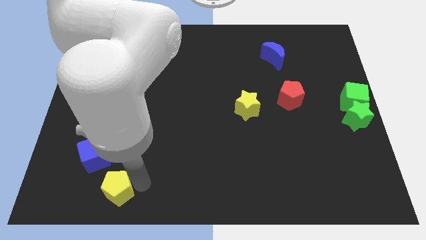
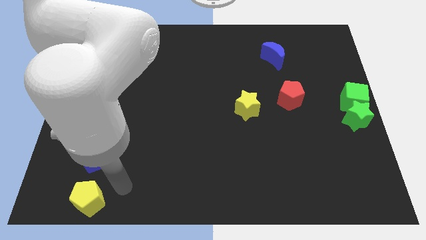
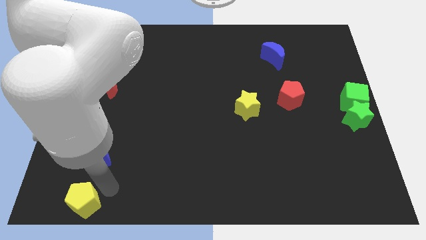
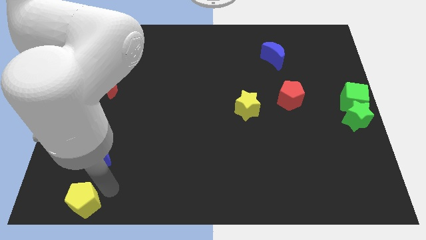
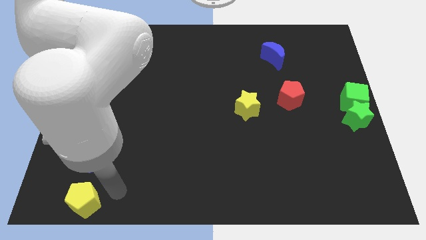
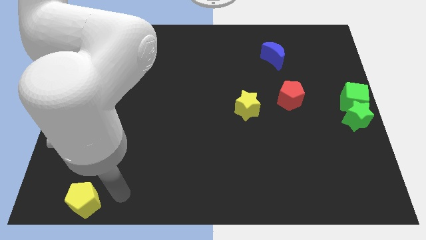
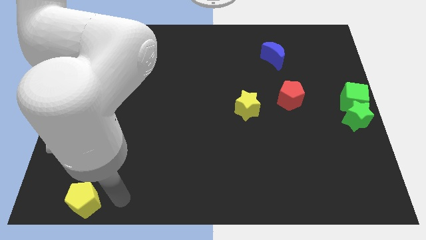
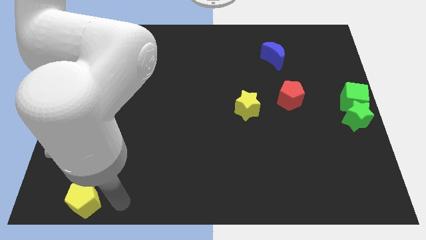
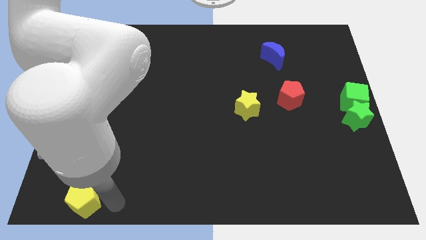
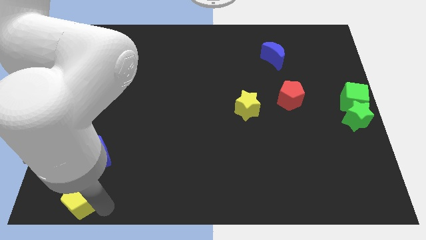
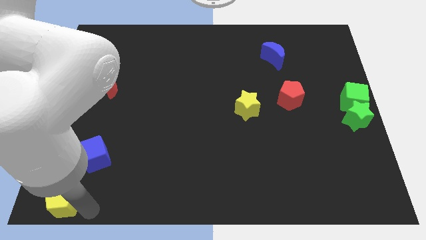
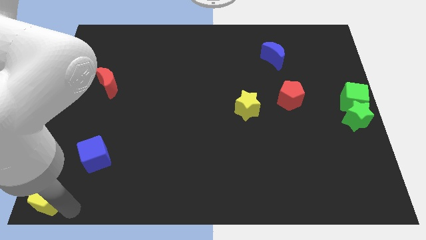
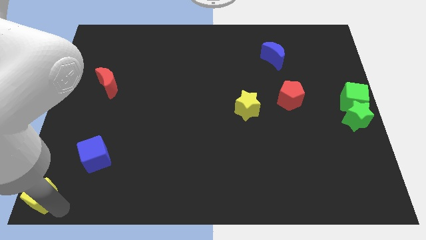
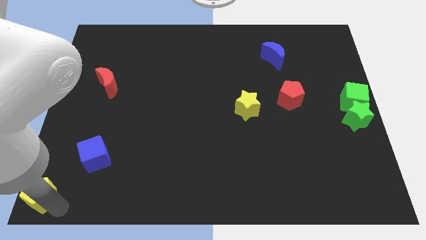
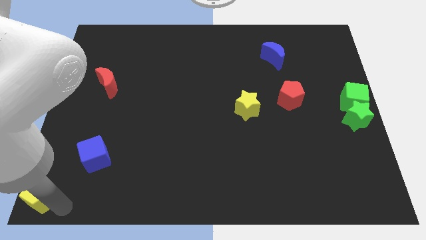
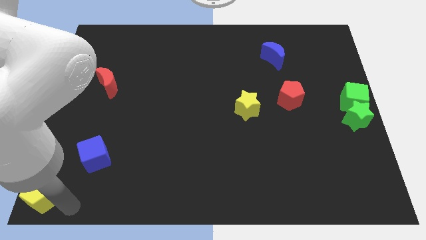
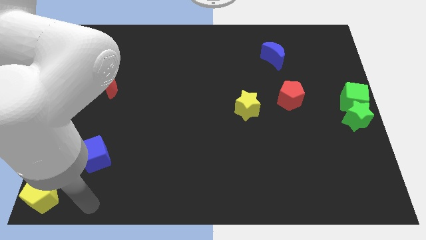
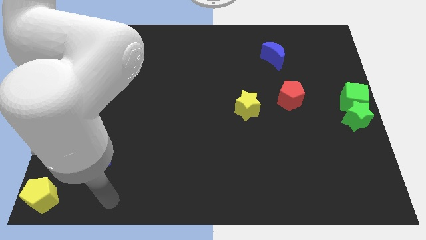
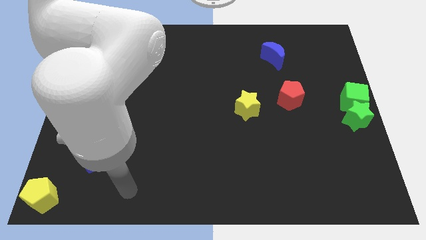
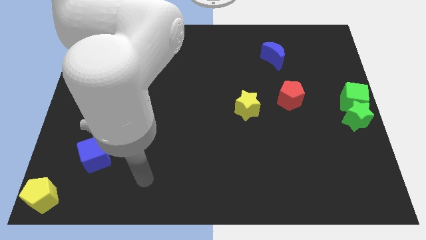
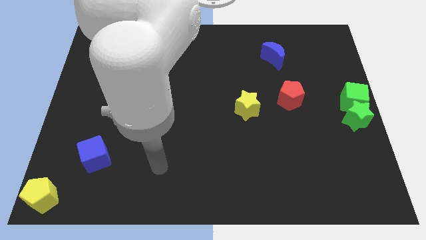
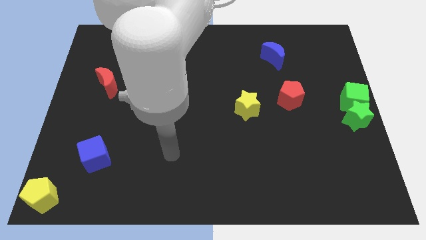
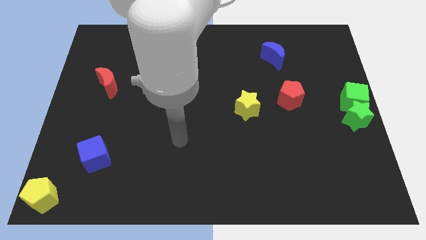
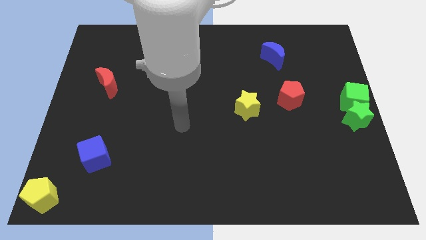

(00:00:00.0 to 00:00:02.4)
push the yellow pentagon to the left side of the board

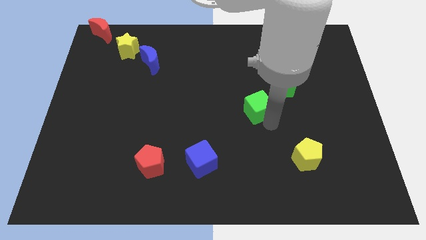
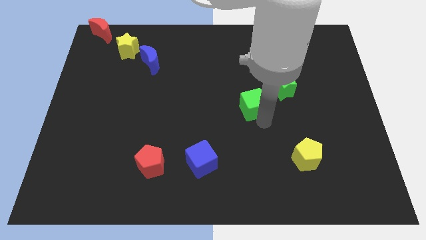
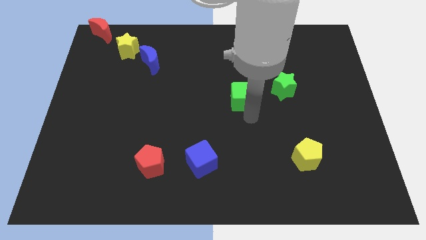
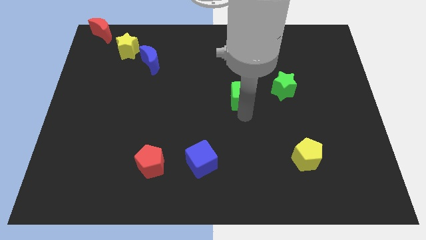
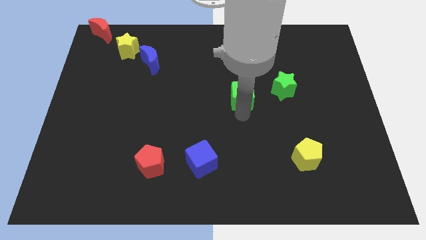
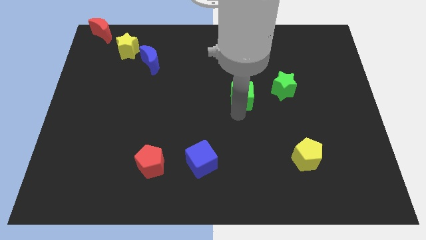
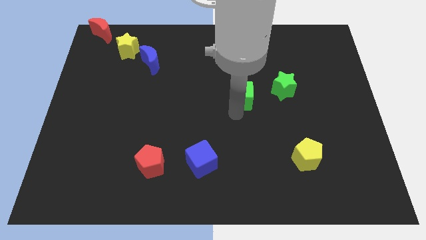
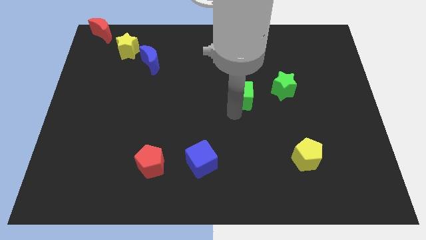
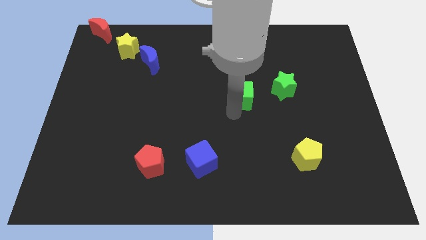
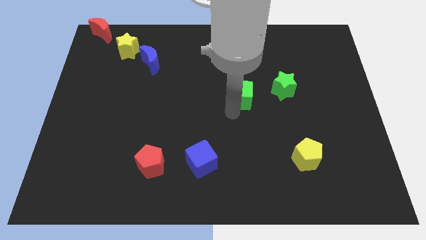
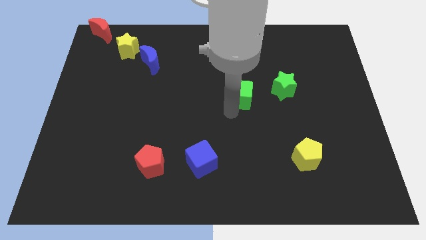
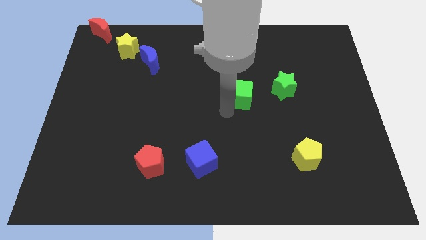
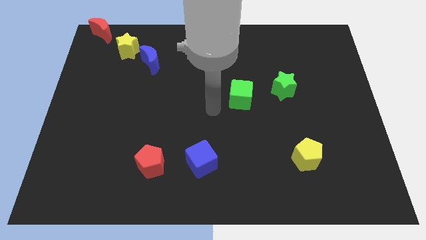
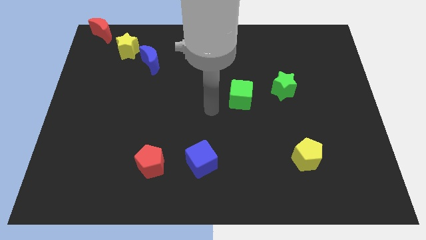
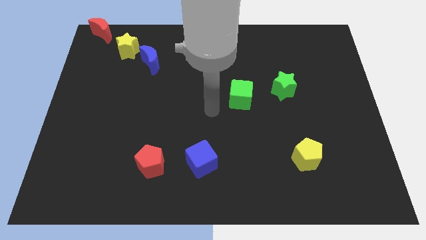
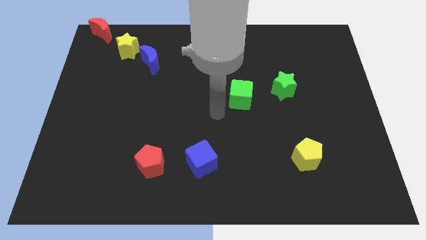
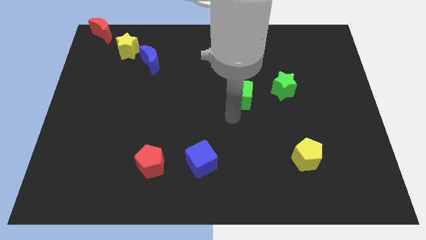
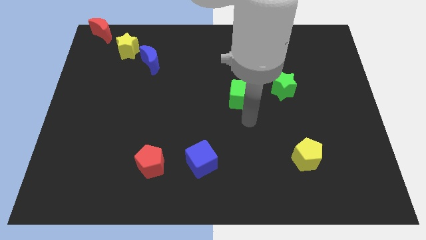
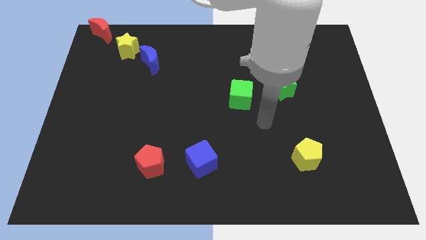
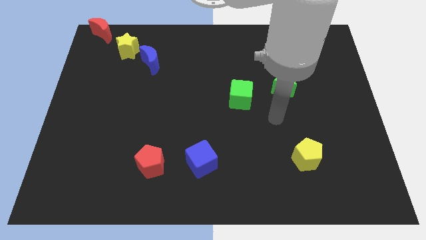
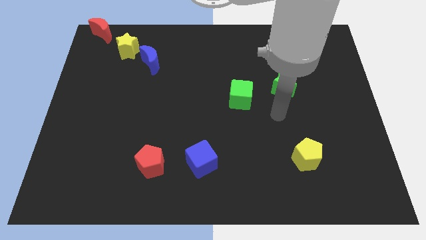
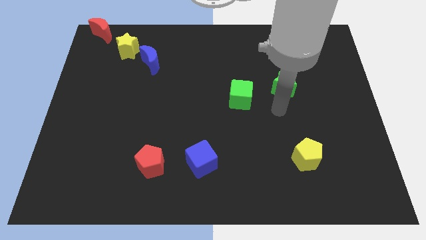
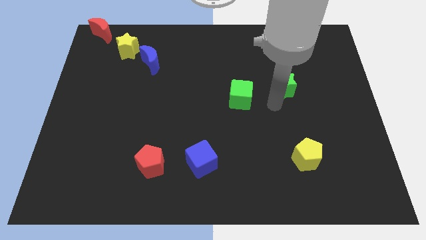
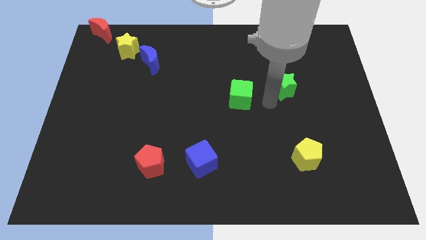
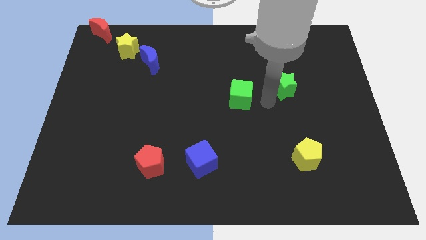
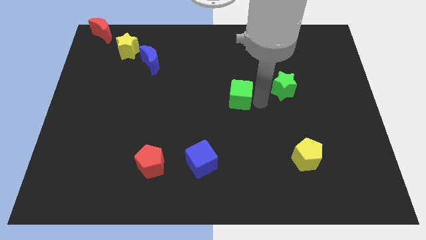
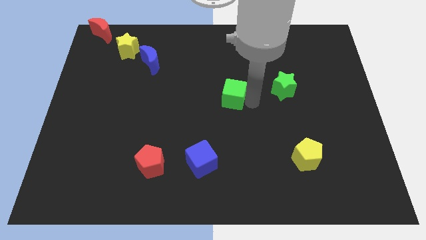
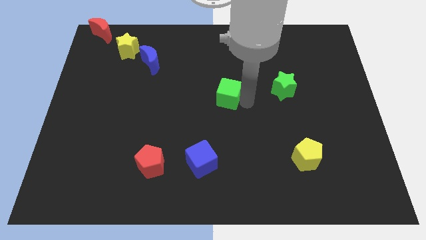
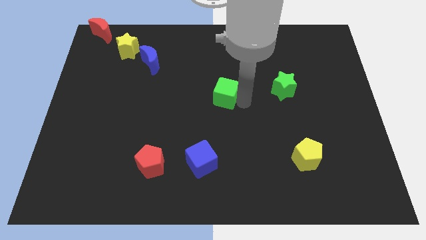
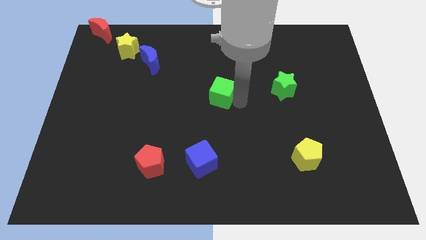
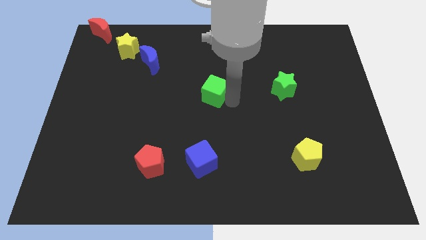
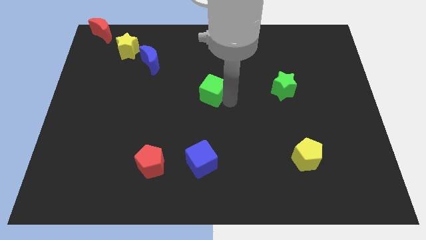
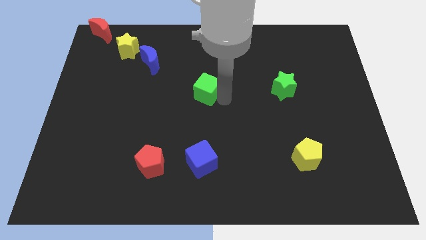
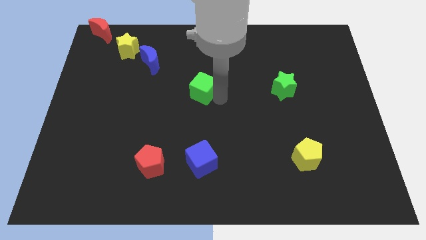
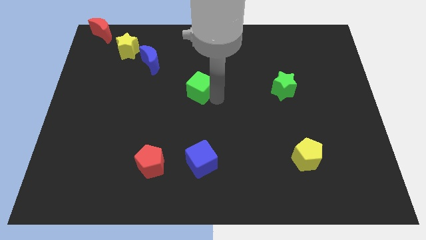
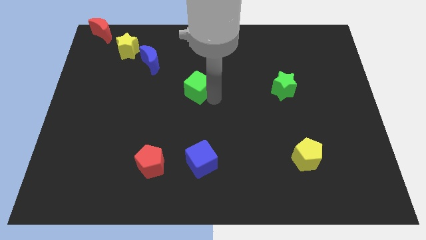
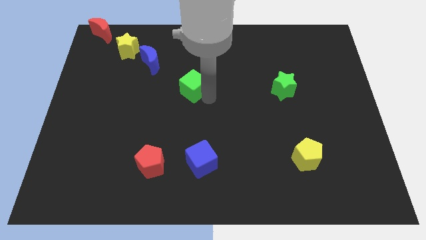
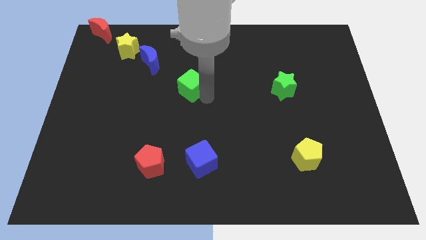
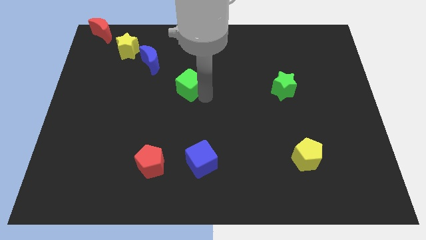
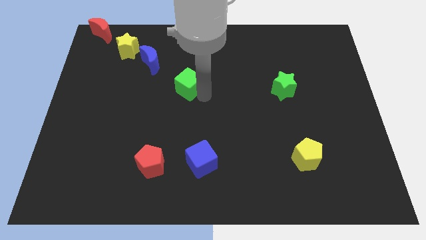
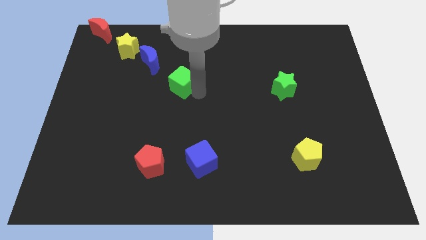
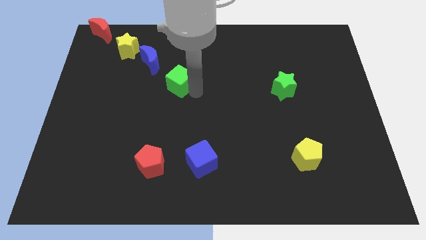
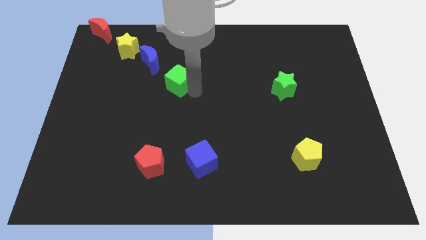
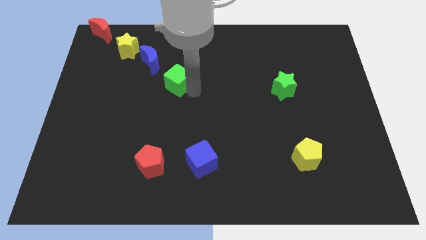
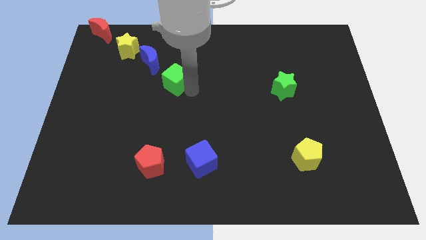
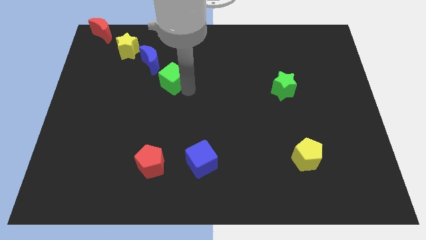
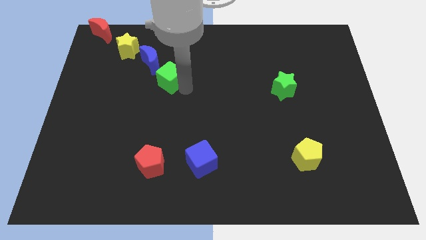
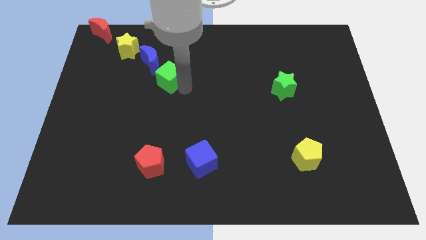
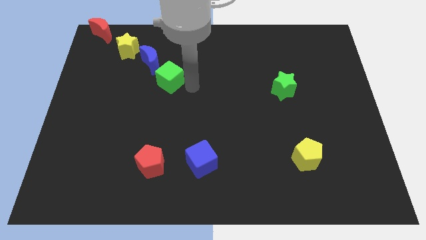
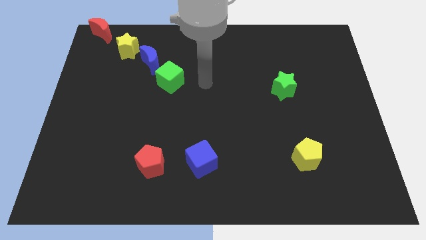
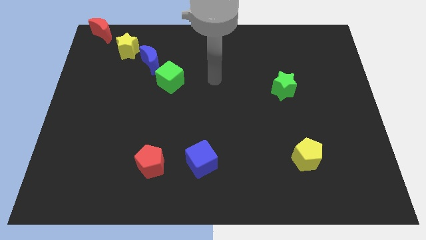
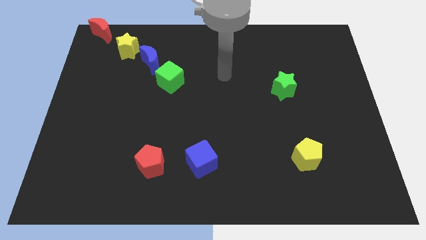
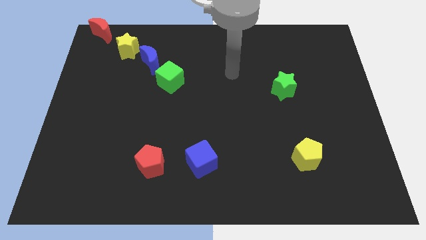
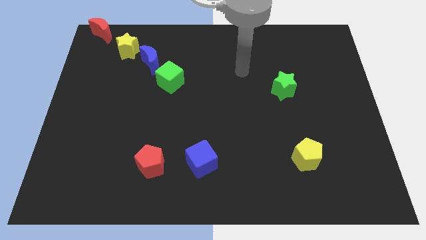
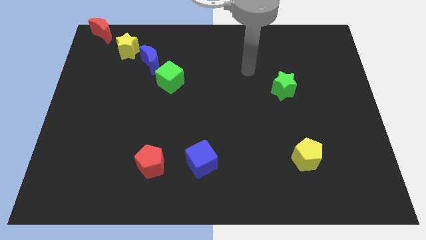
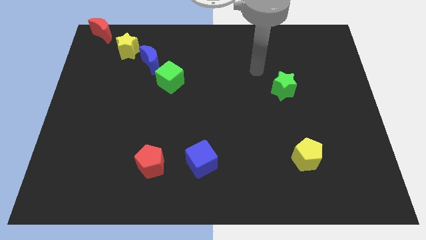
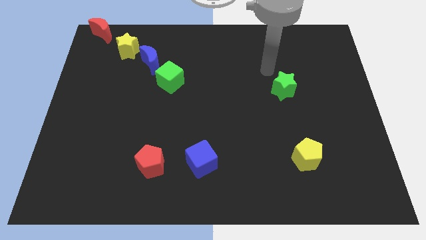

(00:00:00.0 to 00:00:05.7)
move green cube diagonally below the blue moon

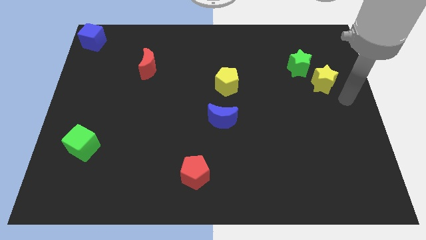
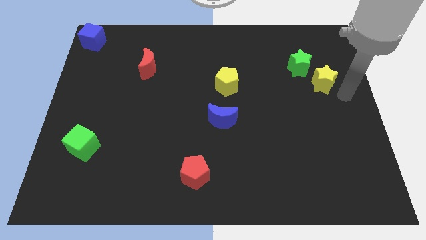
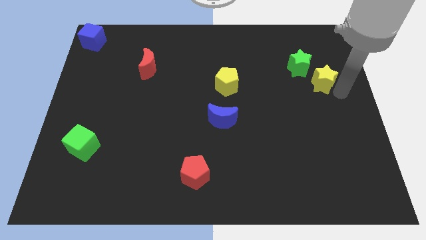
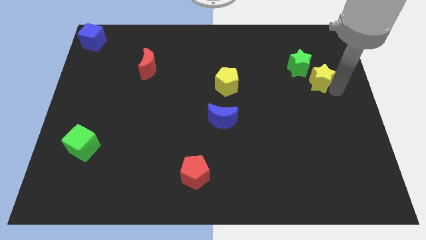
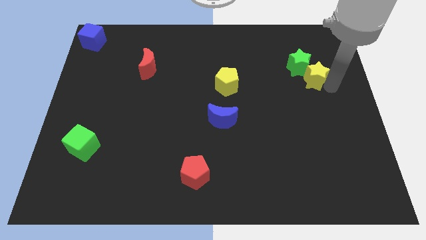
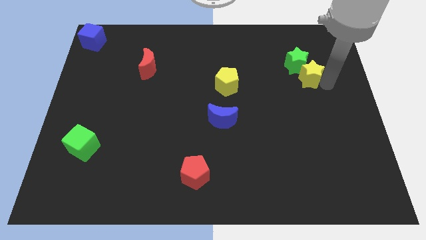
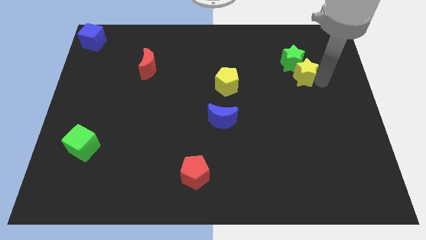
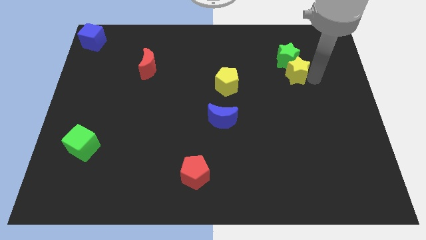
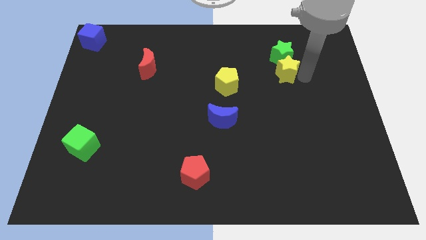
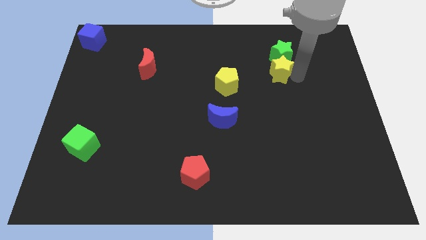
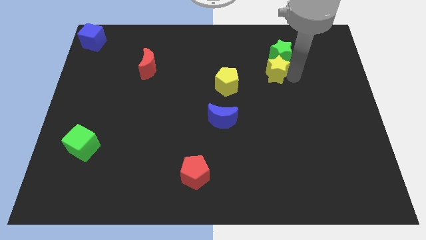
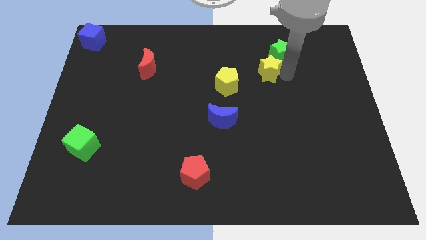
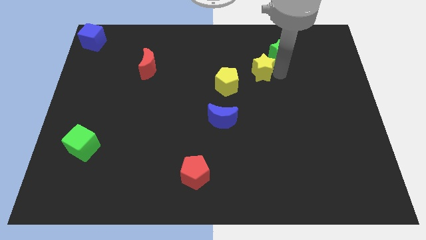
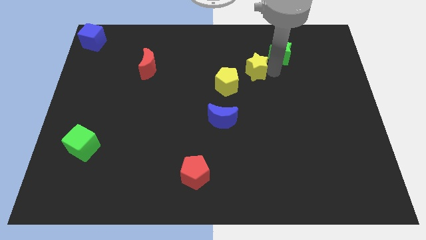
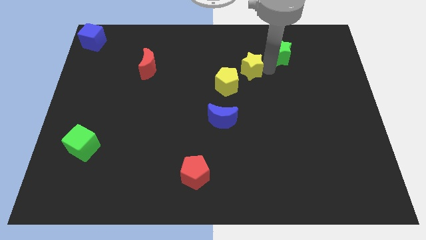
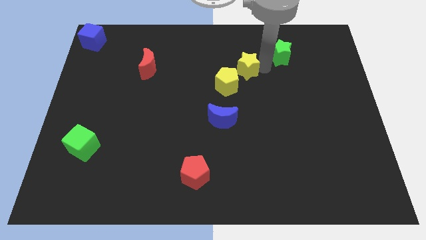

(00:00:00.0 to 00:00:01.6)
push the yellow star close to the yellow pentagon
